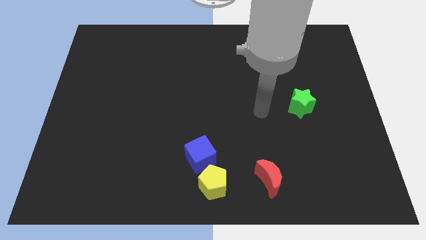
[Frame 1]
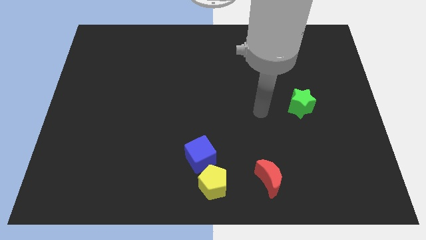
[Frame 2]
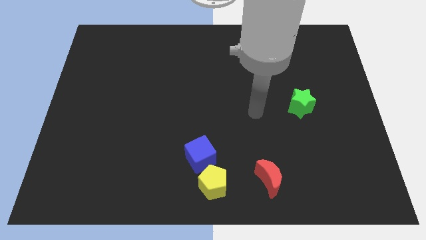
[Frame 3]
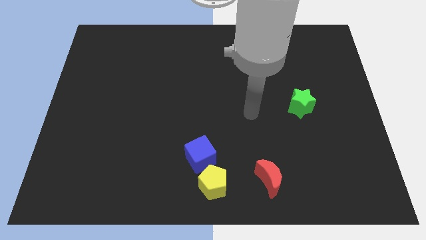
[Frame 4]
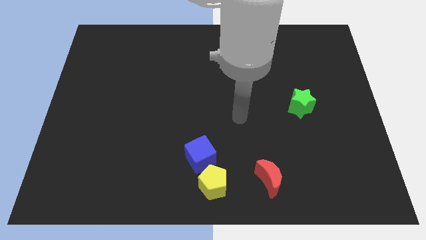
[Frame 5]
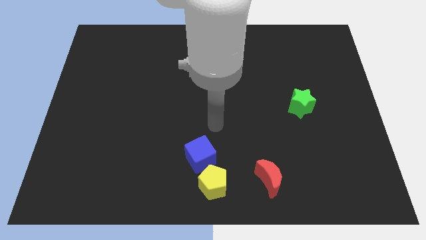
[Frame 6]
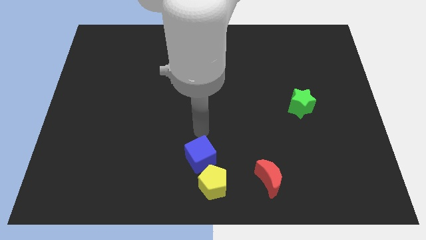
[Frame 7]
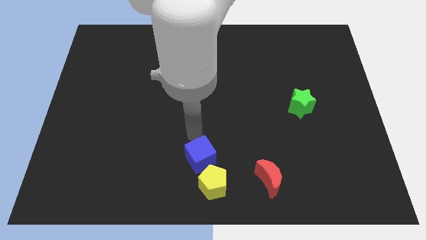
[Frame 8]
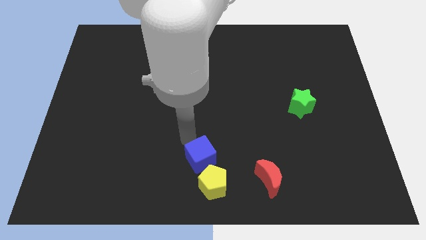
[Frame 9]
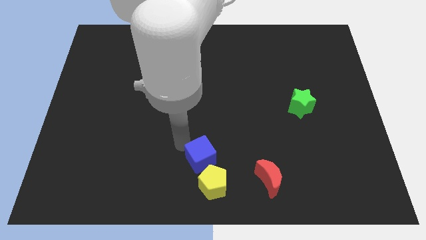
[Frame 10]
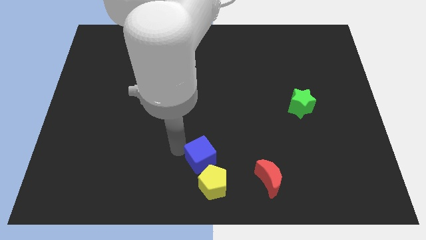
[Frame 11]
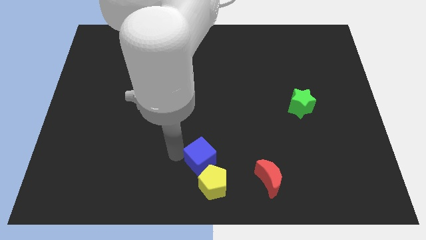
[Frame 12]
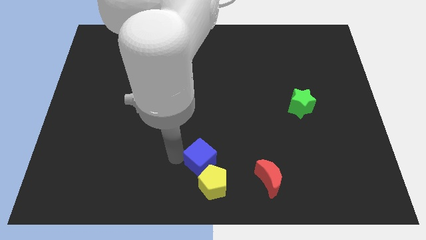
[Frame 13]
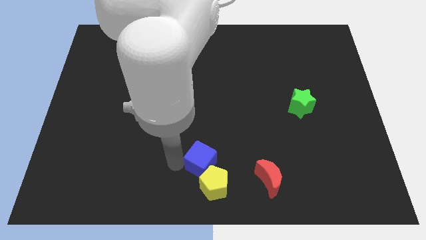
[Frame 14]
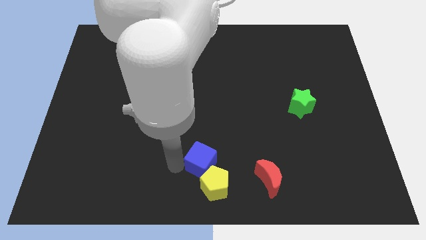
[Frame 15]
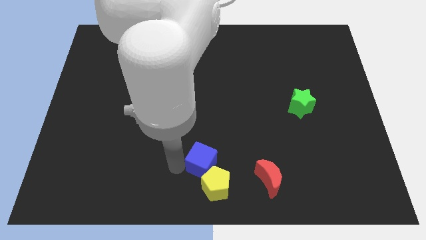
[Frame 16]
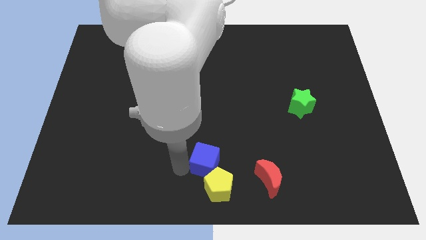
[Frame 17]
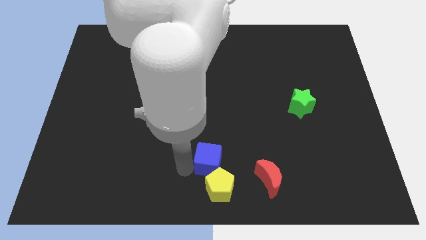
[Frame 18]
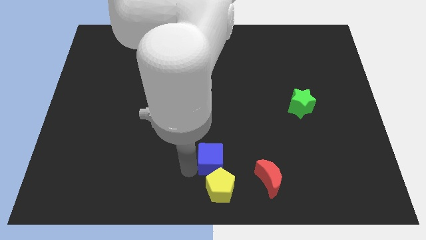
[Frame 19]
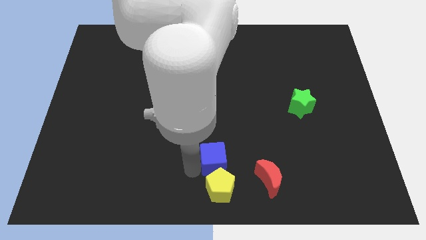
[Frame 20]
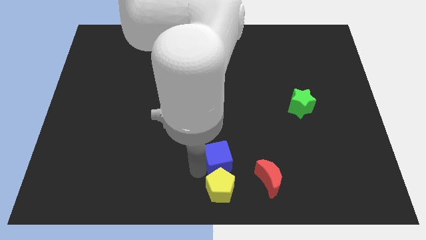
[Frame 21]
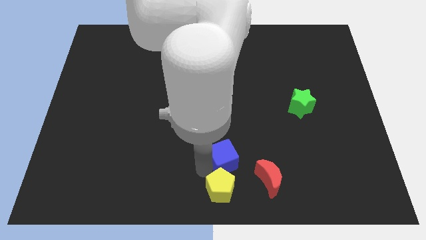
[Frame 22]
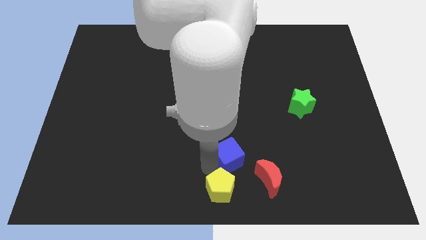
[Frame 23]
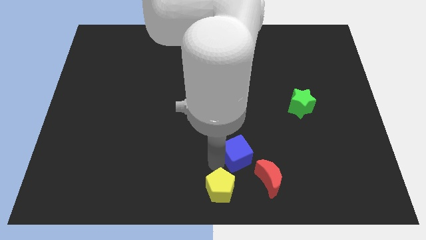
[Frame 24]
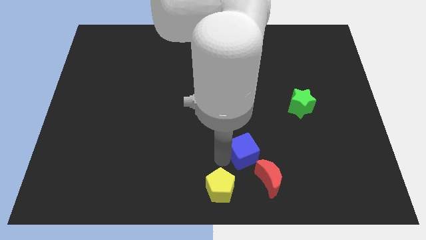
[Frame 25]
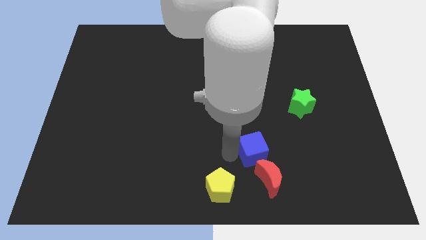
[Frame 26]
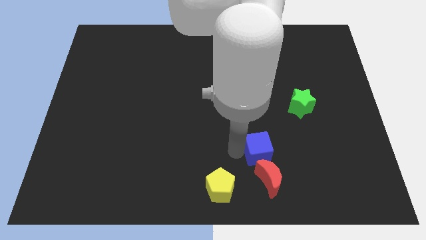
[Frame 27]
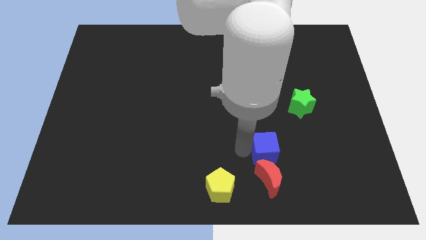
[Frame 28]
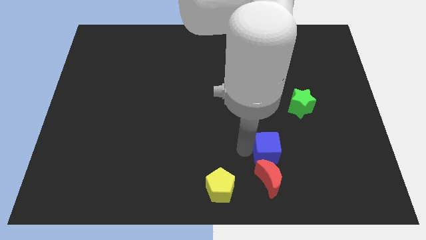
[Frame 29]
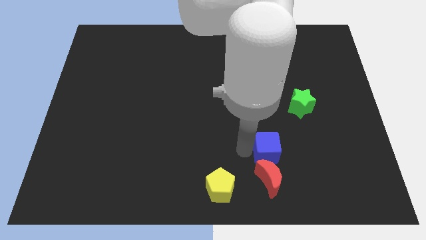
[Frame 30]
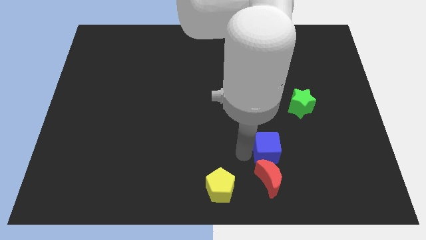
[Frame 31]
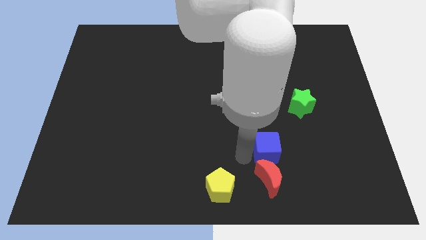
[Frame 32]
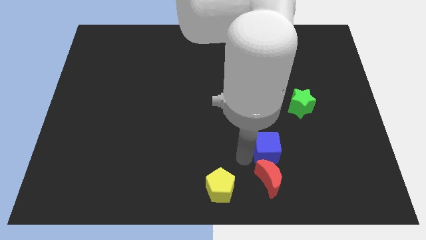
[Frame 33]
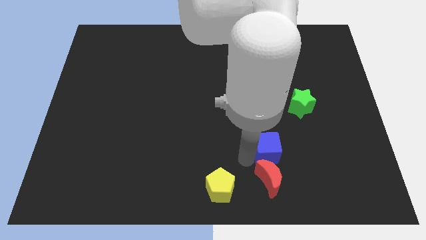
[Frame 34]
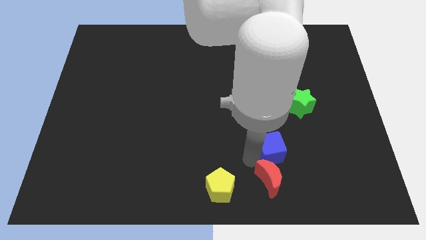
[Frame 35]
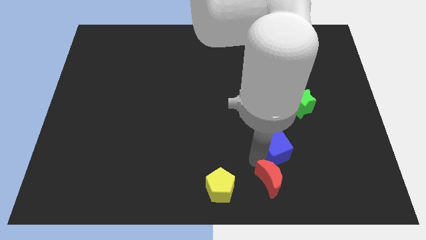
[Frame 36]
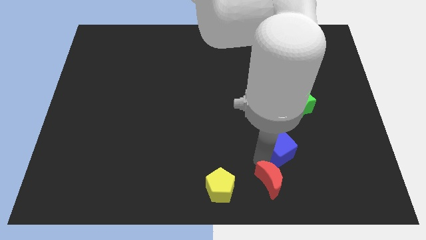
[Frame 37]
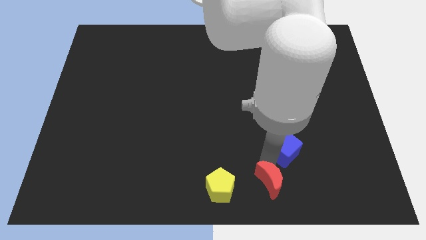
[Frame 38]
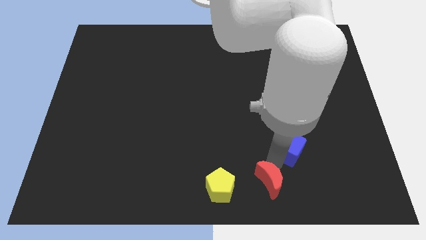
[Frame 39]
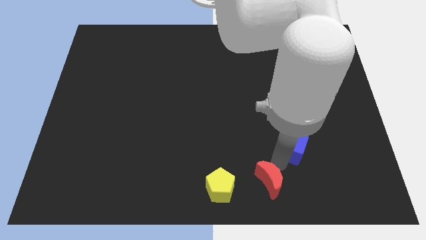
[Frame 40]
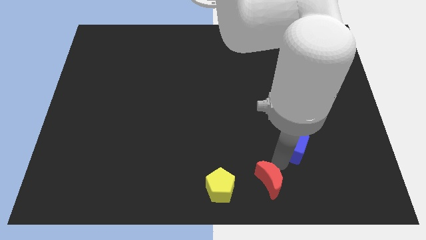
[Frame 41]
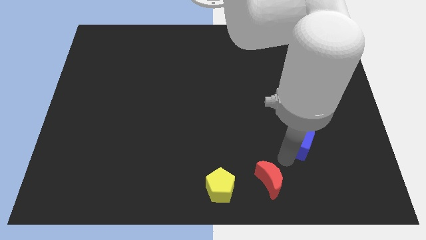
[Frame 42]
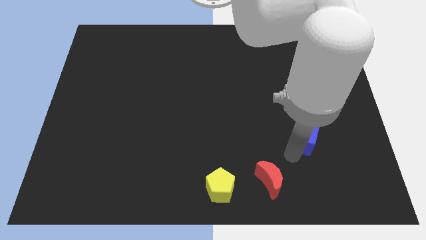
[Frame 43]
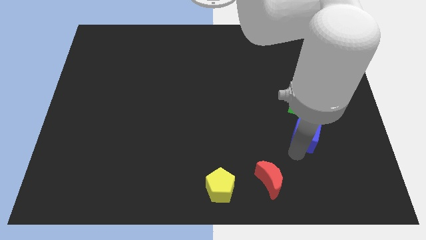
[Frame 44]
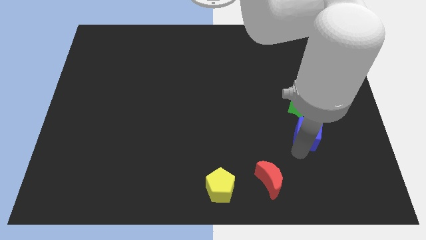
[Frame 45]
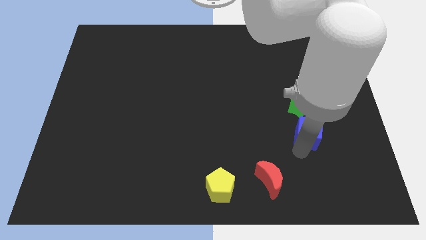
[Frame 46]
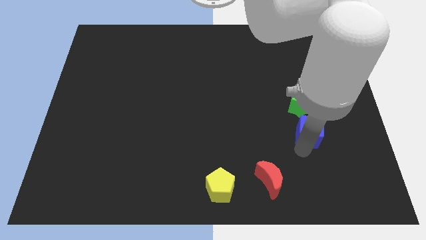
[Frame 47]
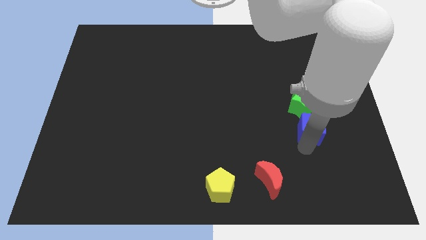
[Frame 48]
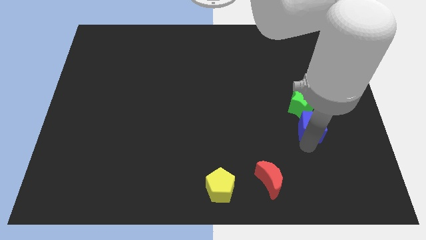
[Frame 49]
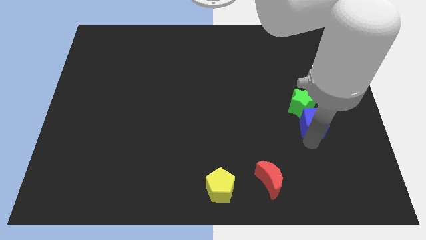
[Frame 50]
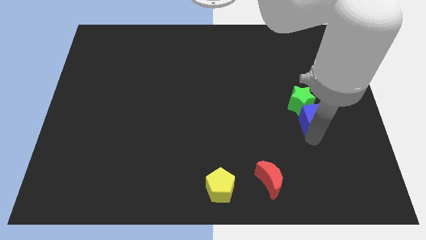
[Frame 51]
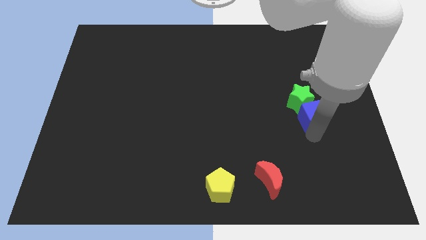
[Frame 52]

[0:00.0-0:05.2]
put the cube next to the green star

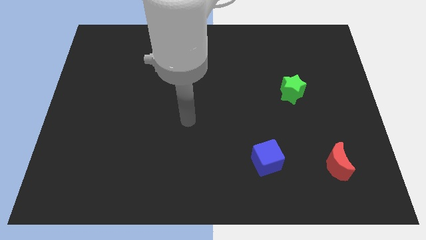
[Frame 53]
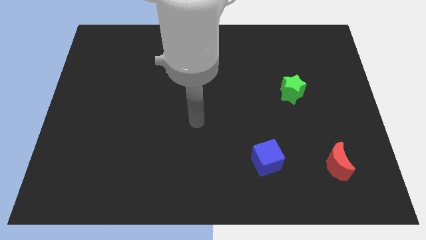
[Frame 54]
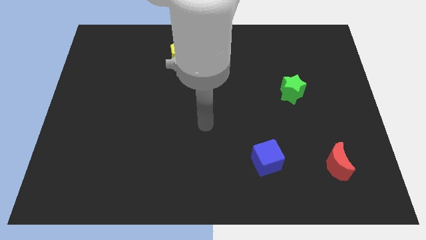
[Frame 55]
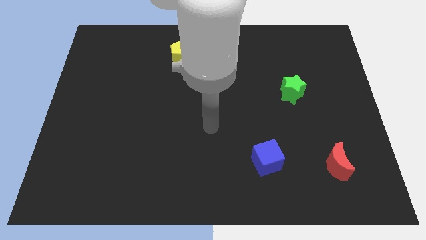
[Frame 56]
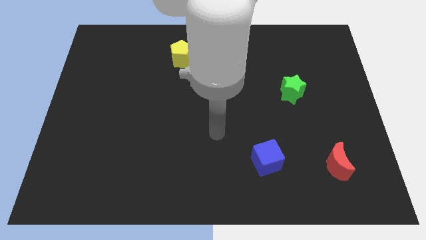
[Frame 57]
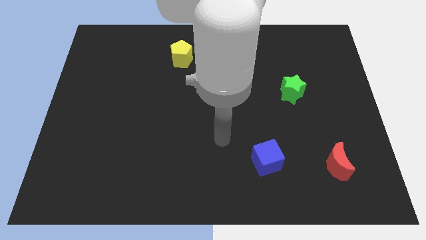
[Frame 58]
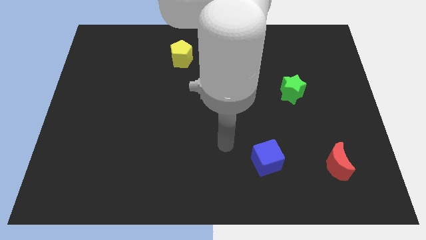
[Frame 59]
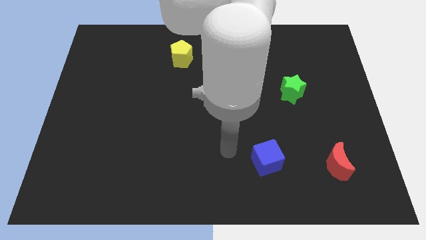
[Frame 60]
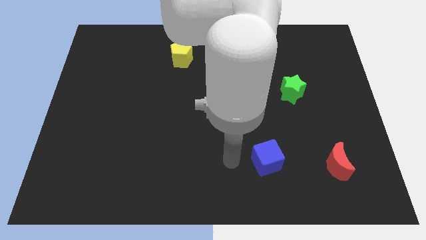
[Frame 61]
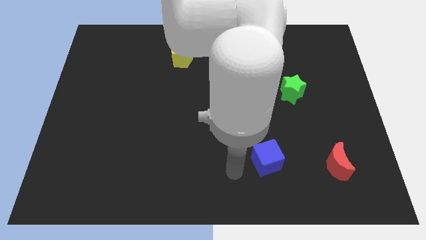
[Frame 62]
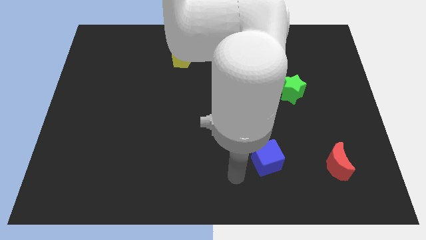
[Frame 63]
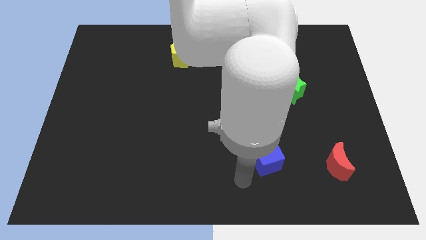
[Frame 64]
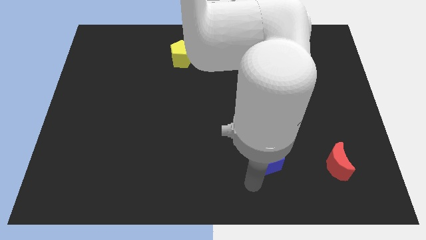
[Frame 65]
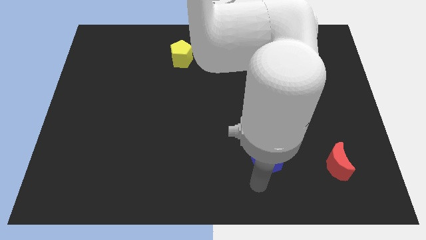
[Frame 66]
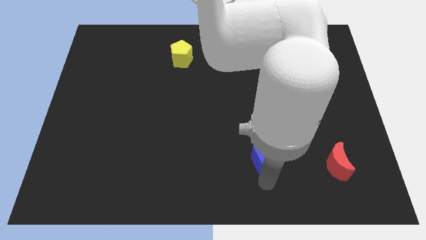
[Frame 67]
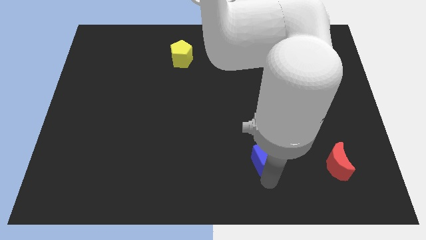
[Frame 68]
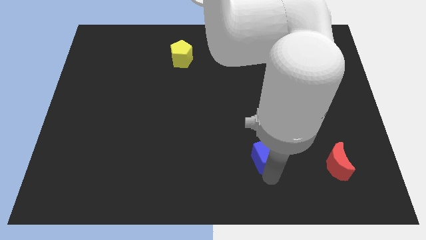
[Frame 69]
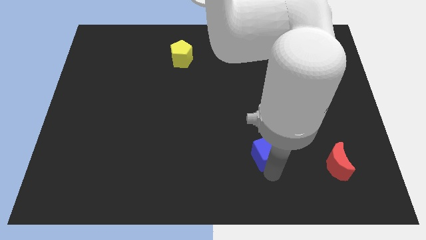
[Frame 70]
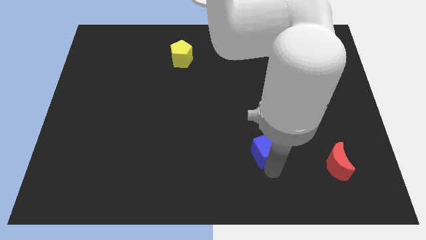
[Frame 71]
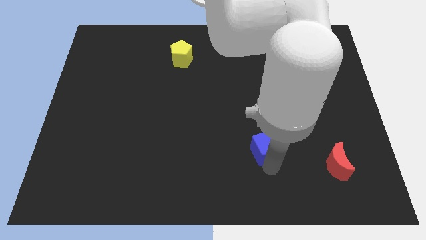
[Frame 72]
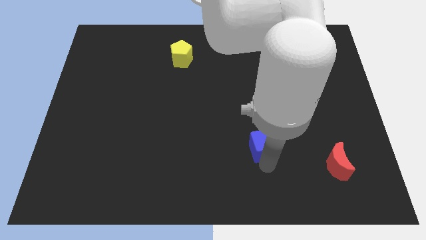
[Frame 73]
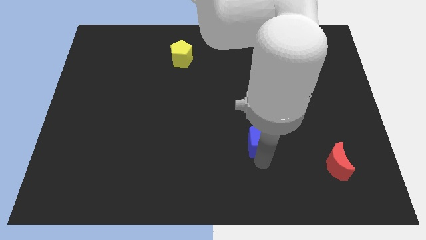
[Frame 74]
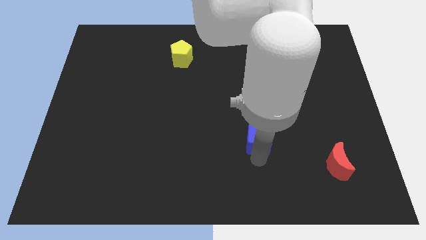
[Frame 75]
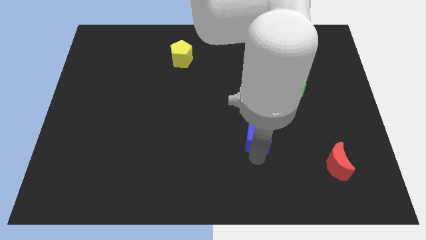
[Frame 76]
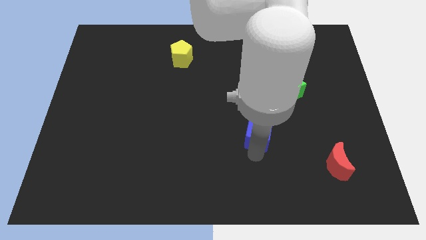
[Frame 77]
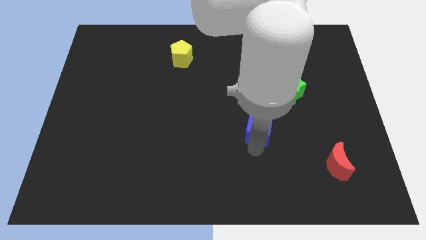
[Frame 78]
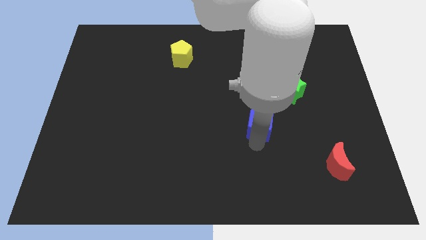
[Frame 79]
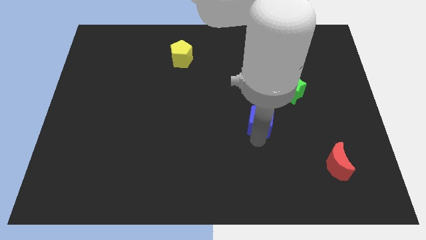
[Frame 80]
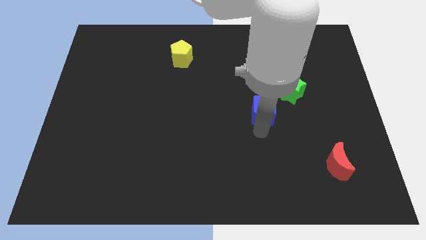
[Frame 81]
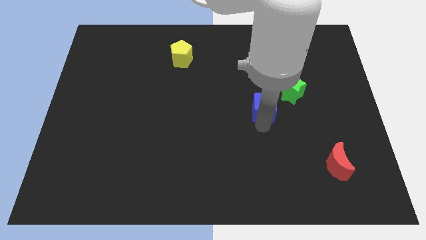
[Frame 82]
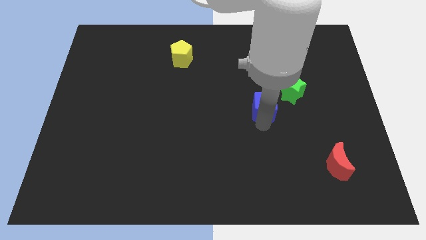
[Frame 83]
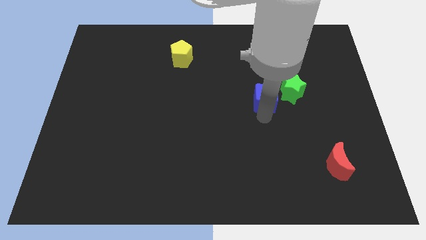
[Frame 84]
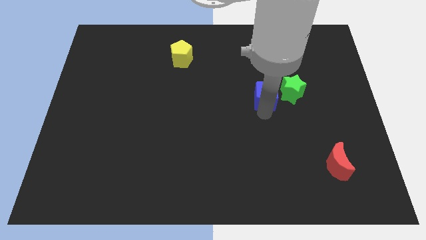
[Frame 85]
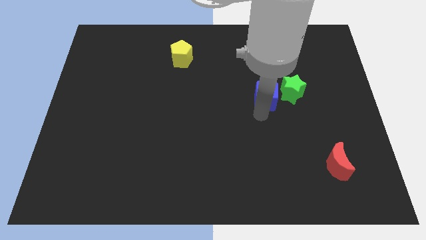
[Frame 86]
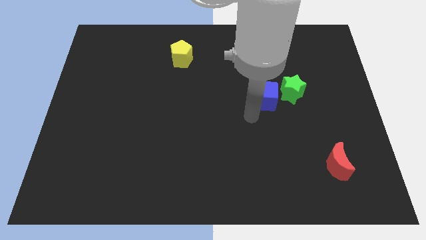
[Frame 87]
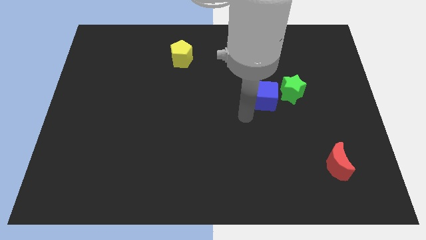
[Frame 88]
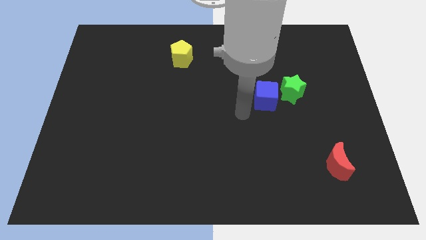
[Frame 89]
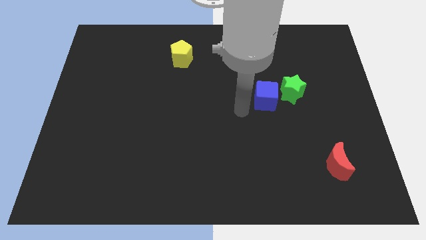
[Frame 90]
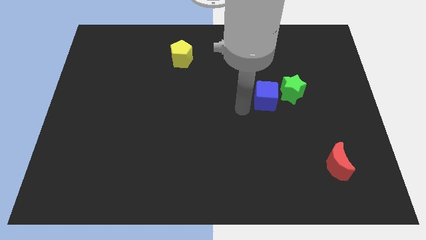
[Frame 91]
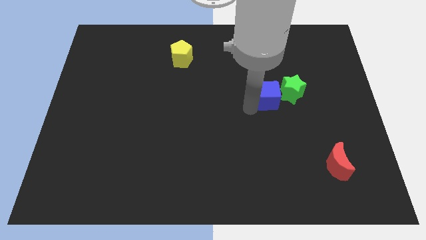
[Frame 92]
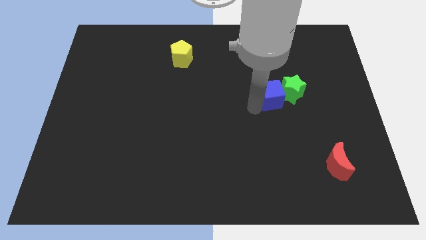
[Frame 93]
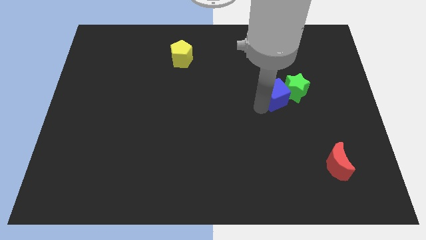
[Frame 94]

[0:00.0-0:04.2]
slide the cube next to the green block
